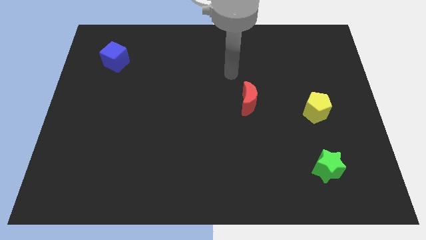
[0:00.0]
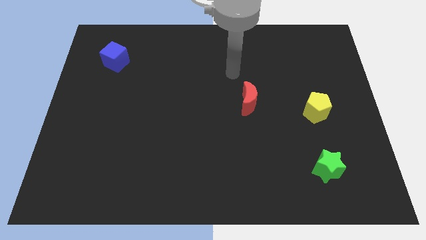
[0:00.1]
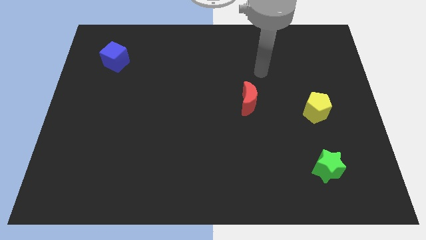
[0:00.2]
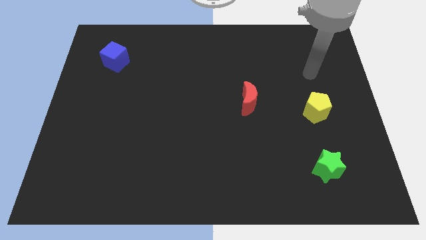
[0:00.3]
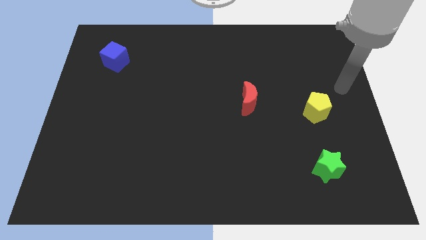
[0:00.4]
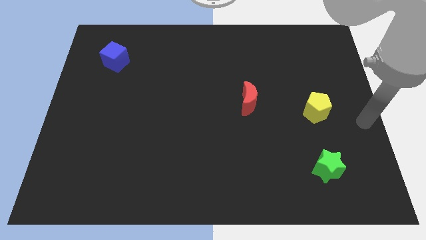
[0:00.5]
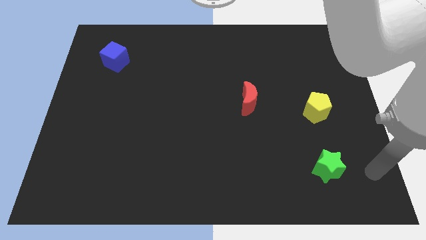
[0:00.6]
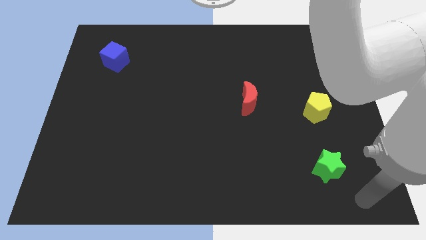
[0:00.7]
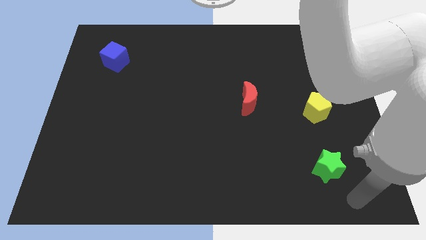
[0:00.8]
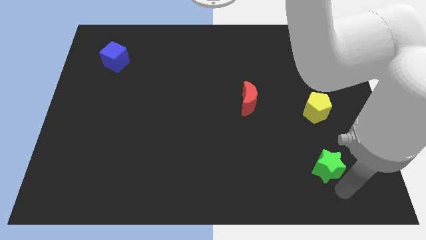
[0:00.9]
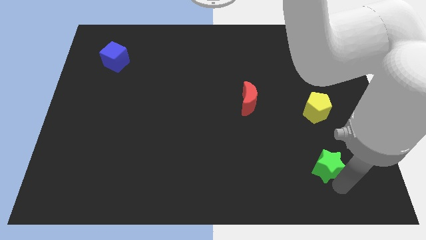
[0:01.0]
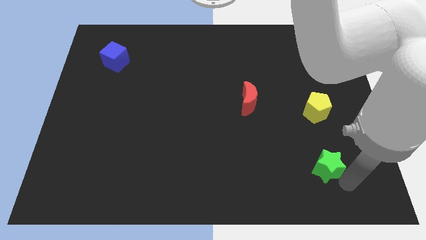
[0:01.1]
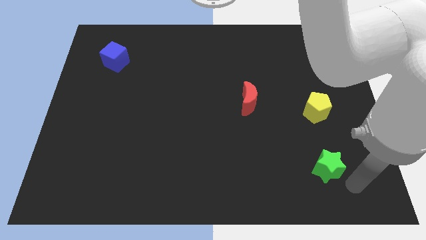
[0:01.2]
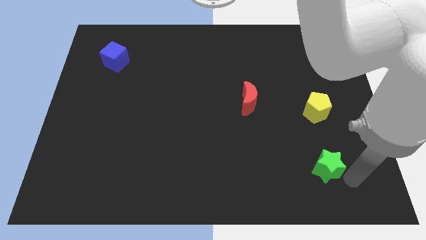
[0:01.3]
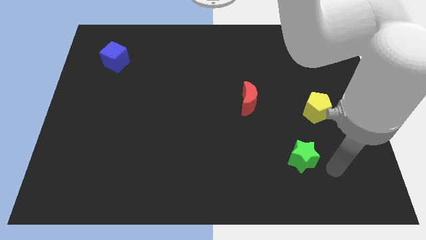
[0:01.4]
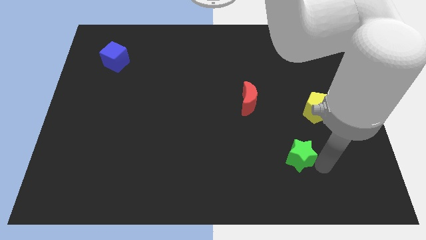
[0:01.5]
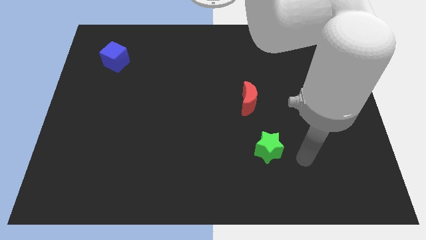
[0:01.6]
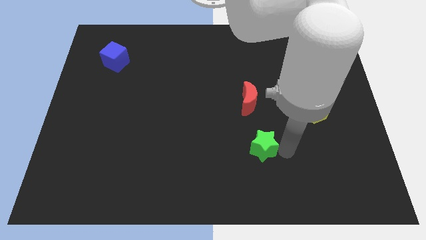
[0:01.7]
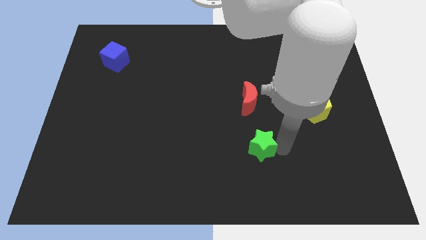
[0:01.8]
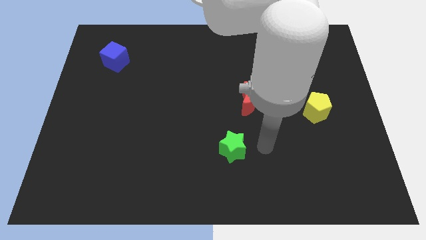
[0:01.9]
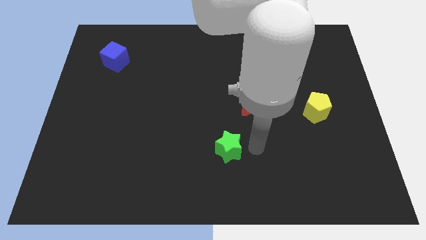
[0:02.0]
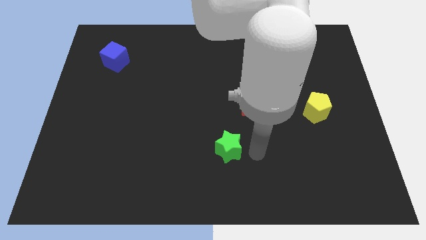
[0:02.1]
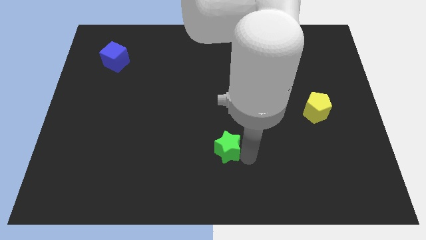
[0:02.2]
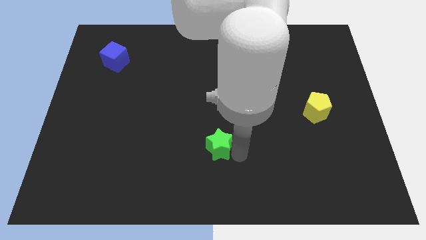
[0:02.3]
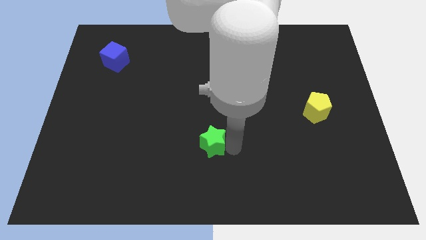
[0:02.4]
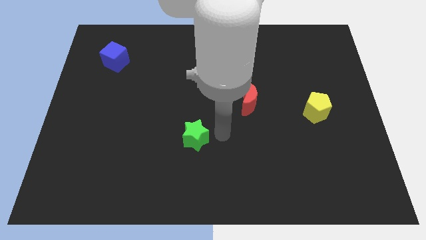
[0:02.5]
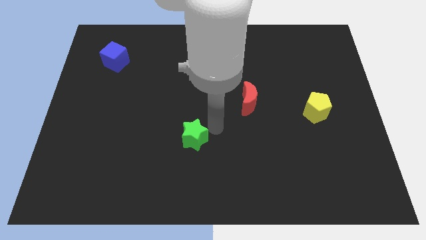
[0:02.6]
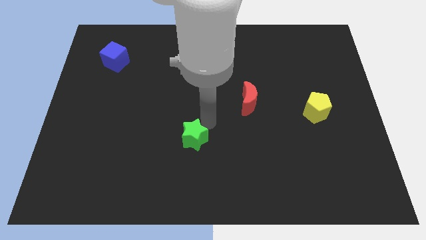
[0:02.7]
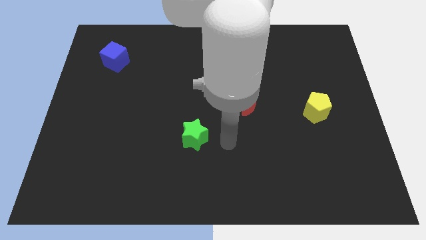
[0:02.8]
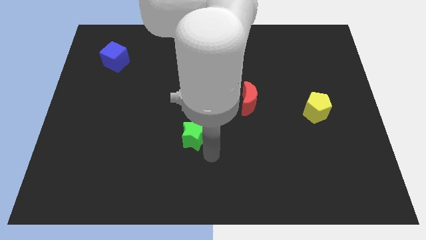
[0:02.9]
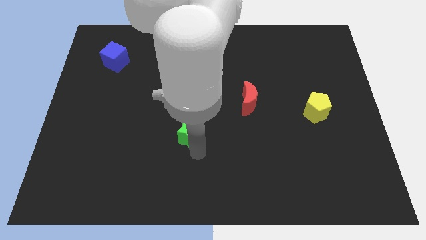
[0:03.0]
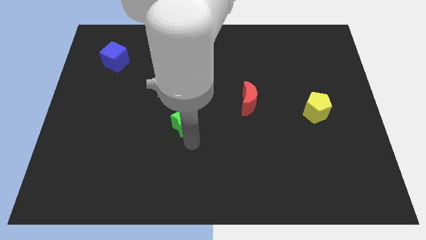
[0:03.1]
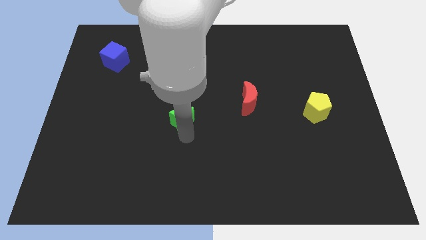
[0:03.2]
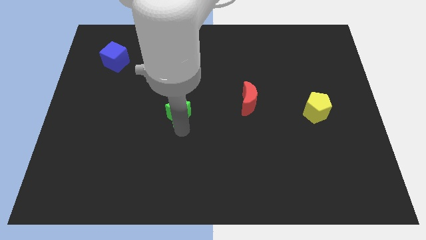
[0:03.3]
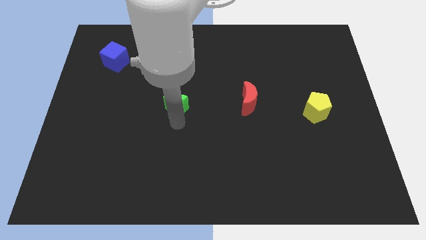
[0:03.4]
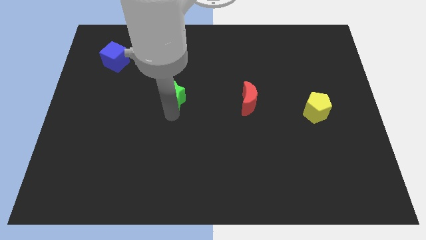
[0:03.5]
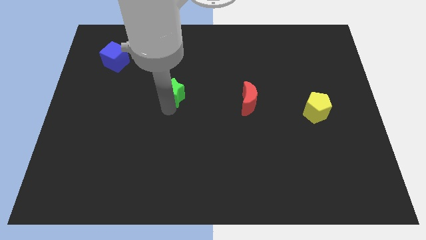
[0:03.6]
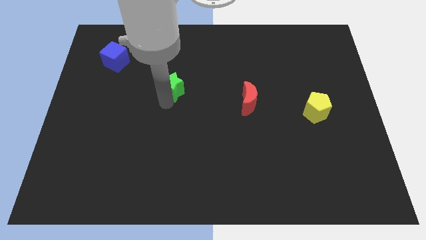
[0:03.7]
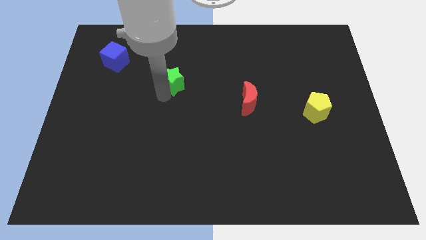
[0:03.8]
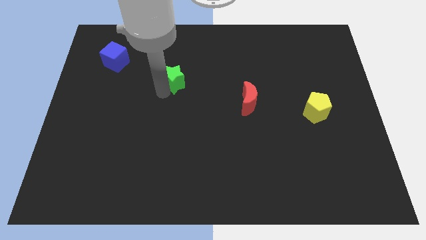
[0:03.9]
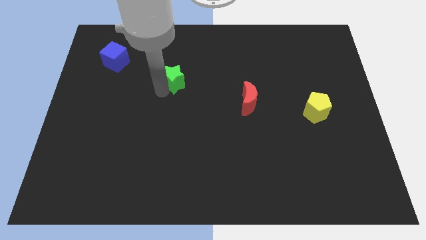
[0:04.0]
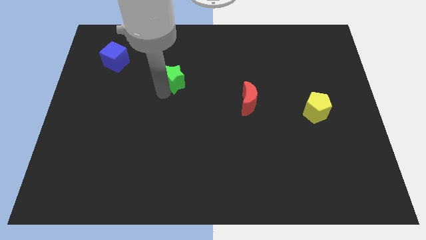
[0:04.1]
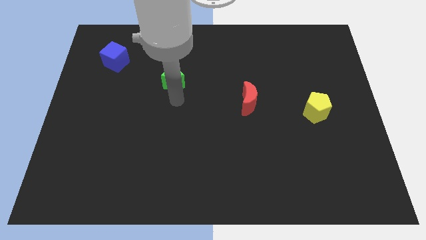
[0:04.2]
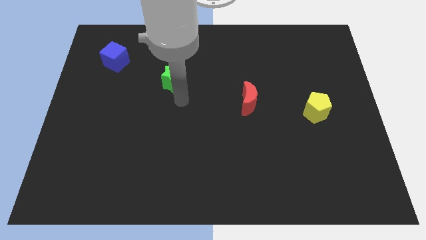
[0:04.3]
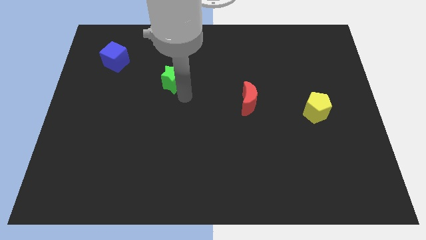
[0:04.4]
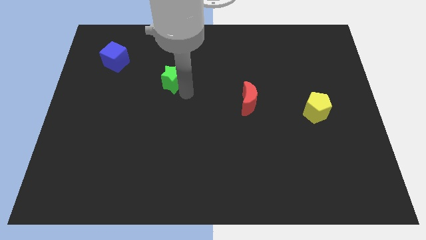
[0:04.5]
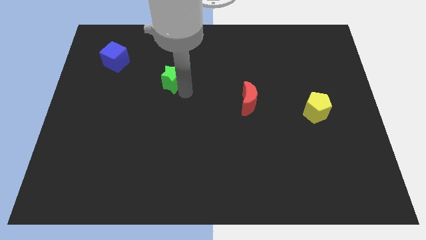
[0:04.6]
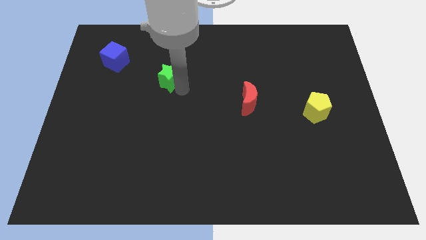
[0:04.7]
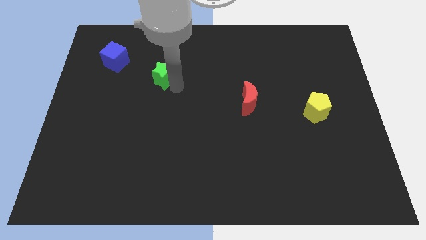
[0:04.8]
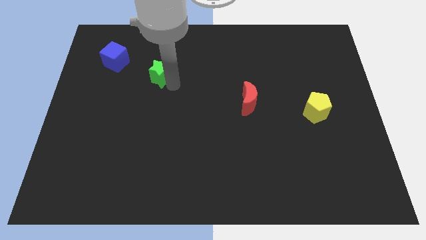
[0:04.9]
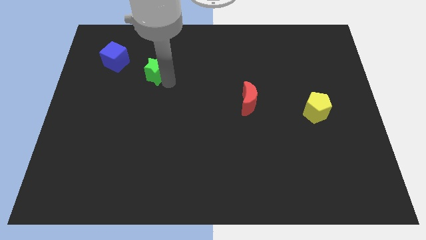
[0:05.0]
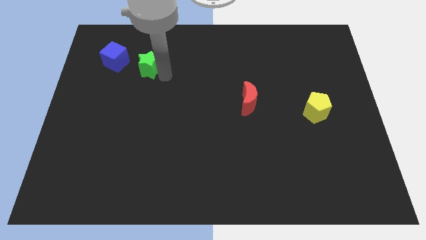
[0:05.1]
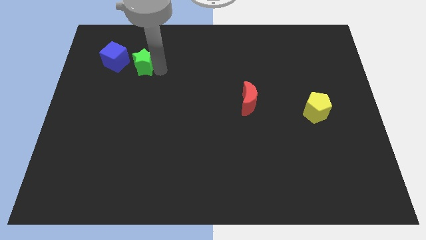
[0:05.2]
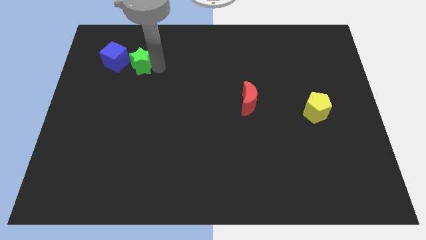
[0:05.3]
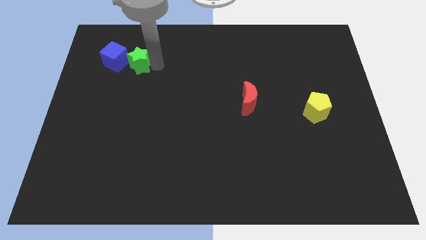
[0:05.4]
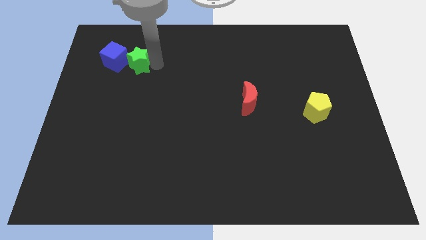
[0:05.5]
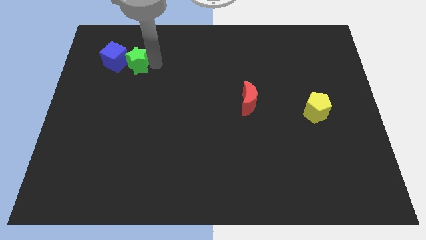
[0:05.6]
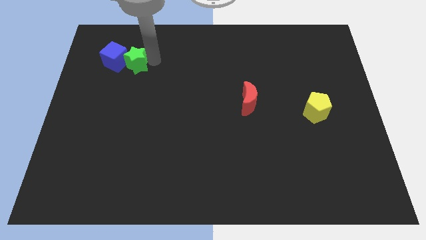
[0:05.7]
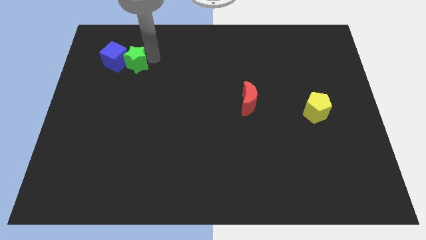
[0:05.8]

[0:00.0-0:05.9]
push the green block to the cube

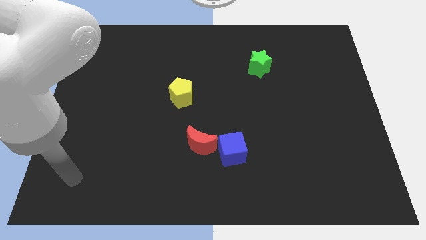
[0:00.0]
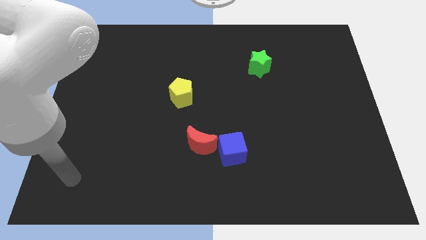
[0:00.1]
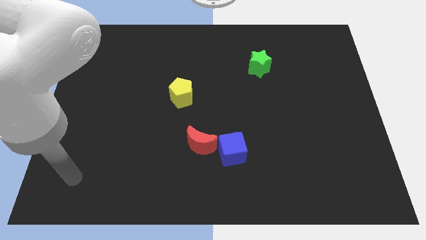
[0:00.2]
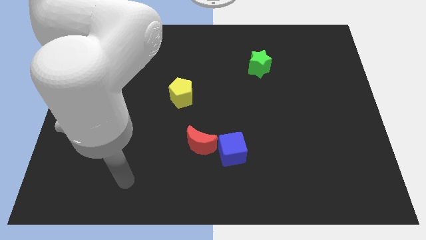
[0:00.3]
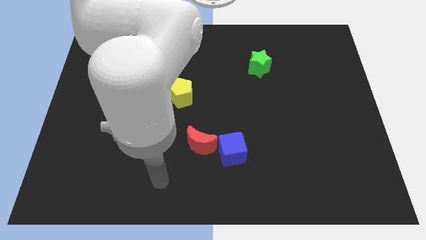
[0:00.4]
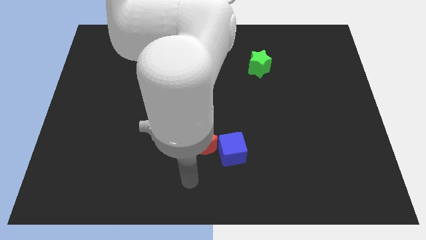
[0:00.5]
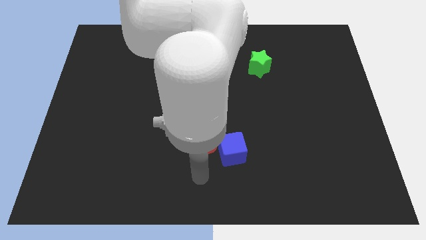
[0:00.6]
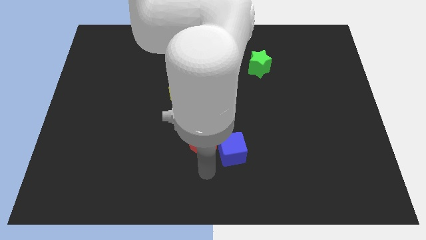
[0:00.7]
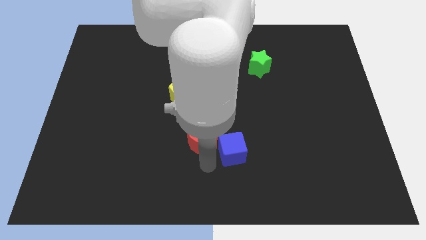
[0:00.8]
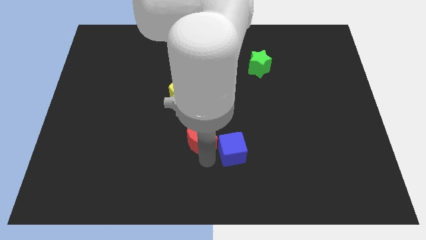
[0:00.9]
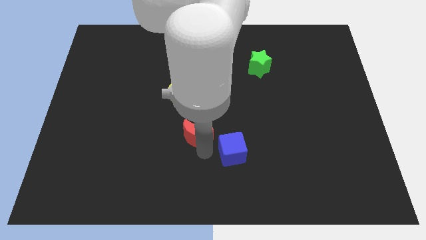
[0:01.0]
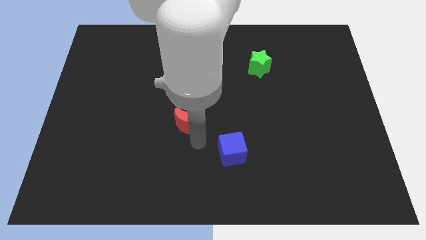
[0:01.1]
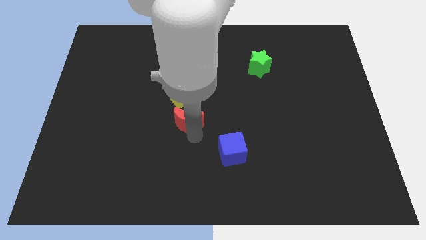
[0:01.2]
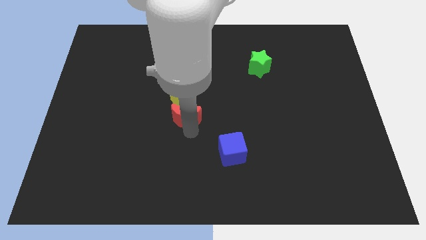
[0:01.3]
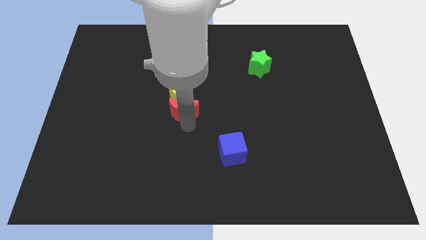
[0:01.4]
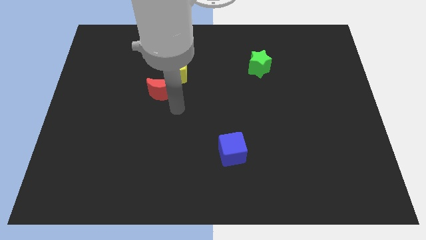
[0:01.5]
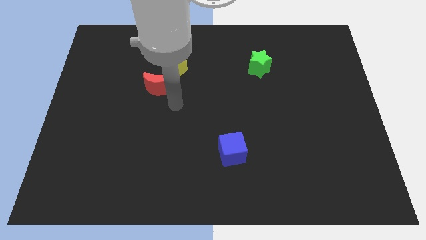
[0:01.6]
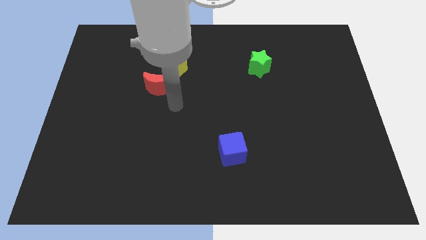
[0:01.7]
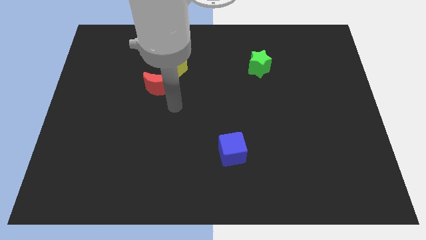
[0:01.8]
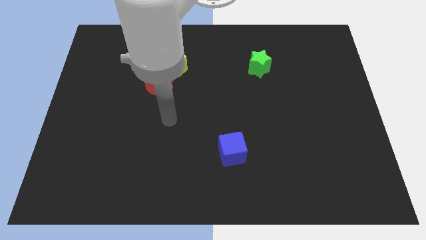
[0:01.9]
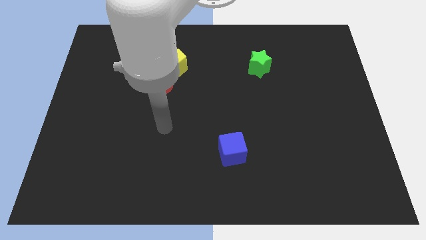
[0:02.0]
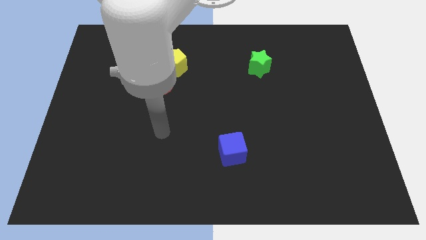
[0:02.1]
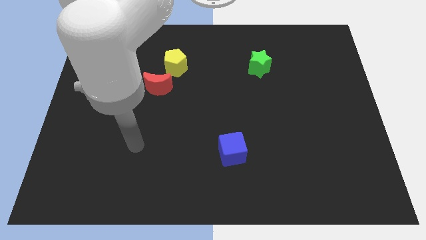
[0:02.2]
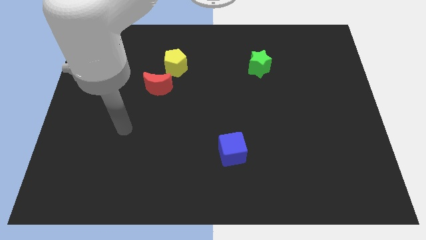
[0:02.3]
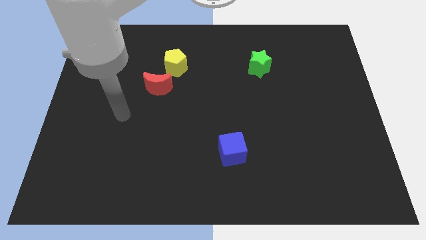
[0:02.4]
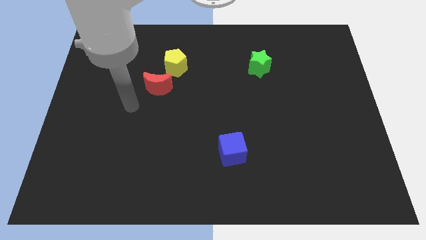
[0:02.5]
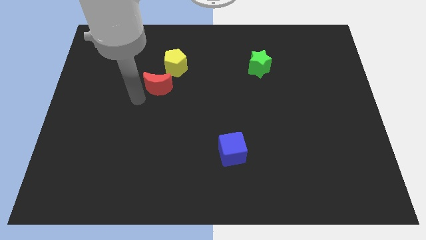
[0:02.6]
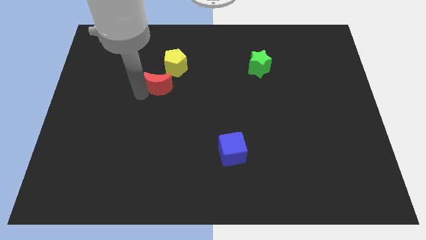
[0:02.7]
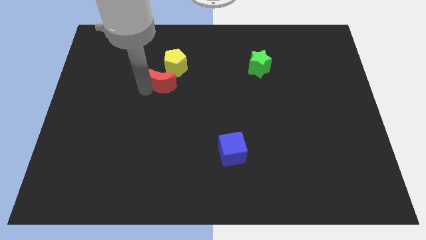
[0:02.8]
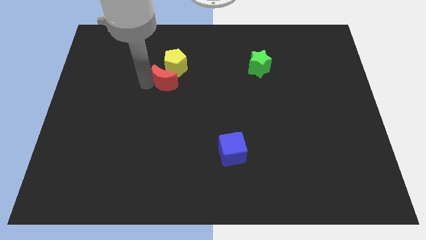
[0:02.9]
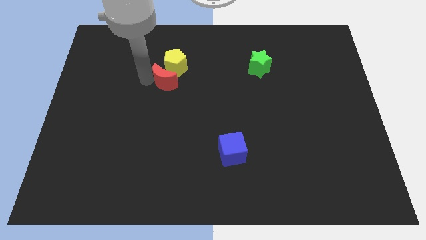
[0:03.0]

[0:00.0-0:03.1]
move the red block to the yellow pentagon
